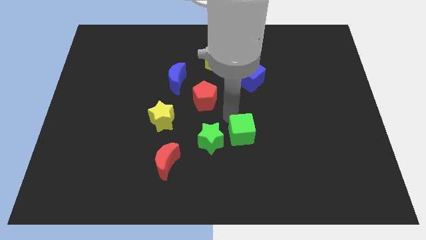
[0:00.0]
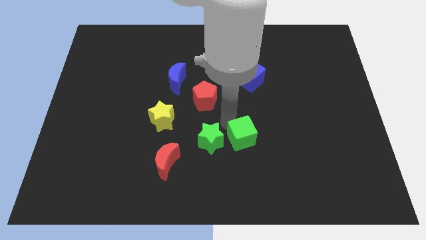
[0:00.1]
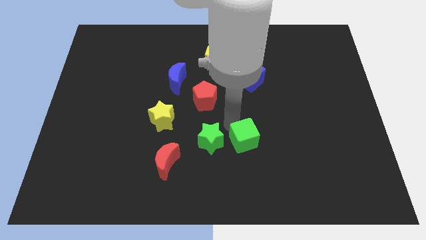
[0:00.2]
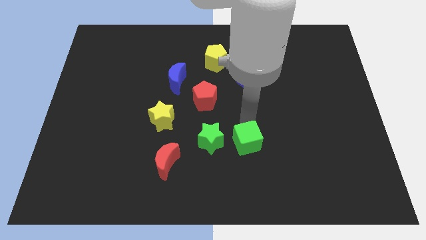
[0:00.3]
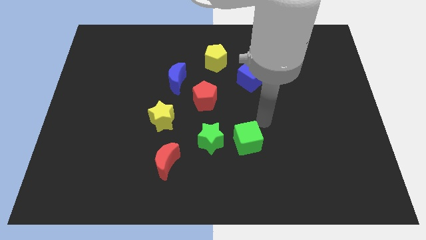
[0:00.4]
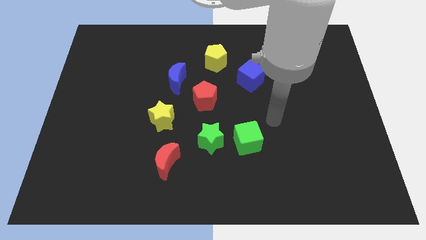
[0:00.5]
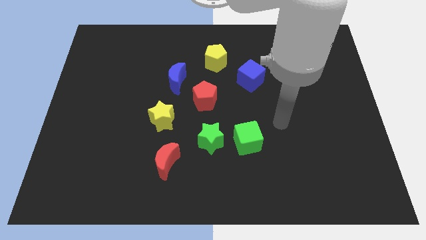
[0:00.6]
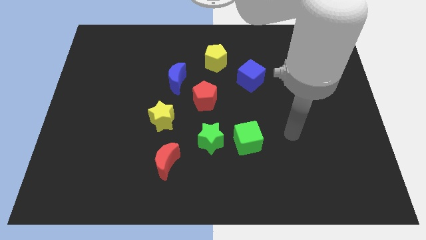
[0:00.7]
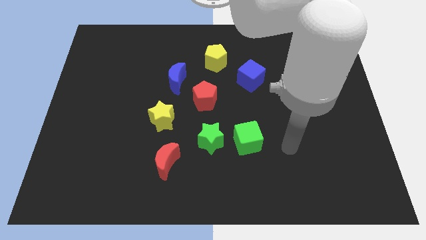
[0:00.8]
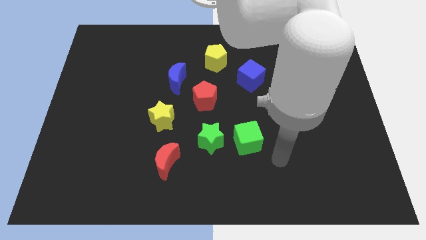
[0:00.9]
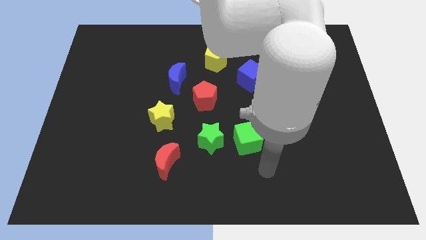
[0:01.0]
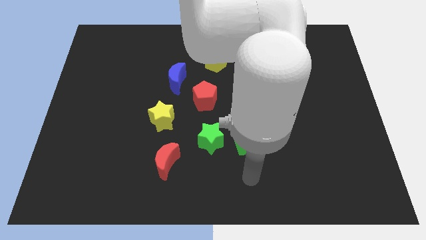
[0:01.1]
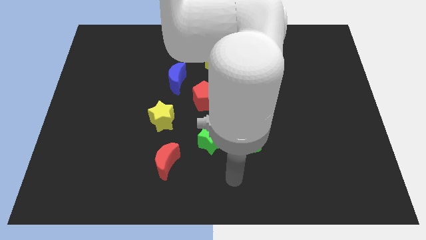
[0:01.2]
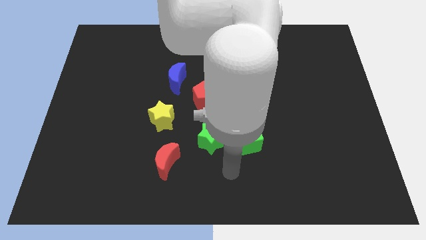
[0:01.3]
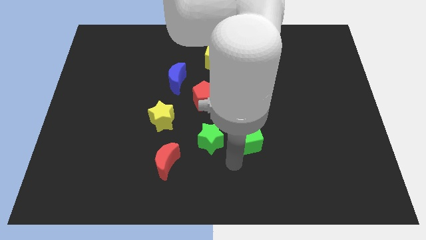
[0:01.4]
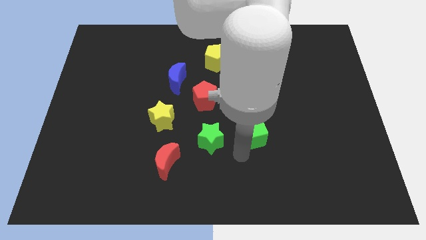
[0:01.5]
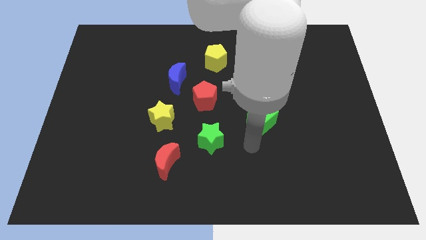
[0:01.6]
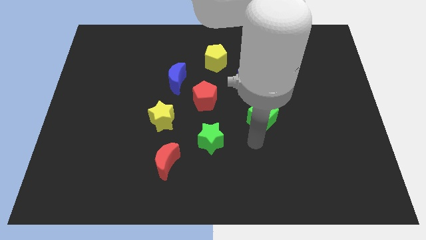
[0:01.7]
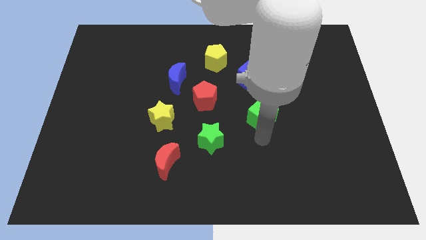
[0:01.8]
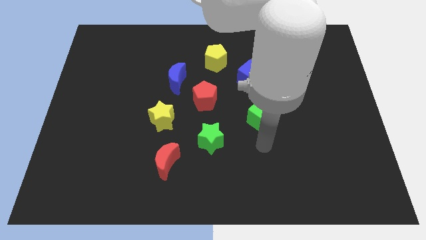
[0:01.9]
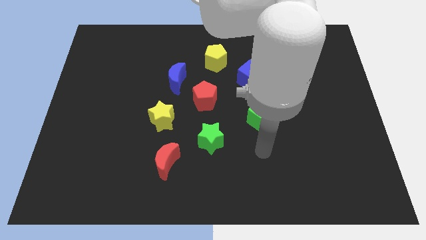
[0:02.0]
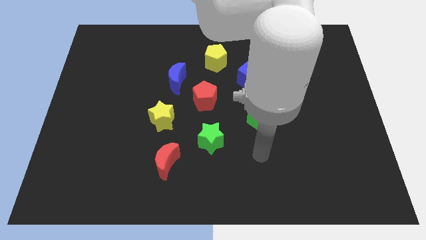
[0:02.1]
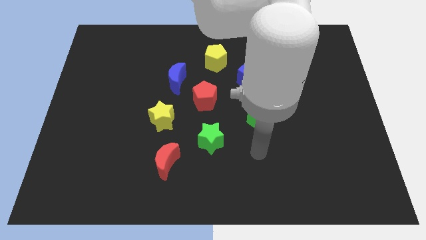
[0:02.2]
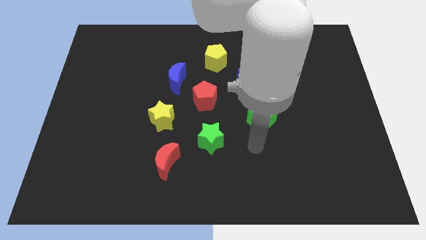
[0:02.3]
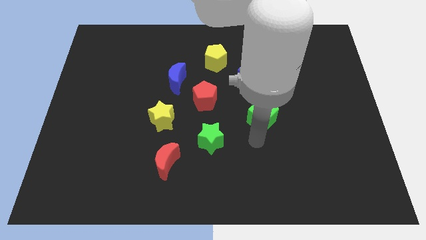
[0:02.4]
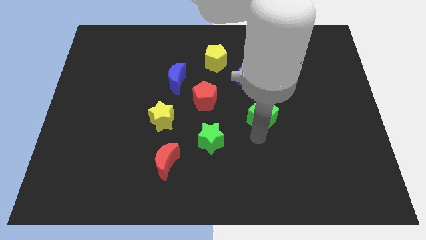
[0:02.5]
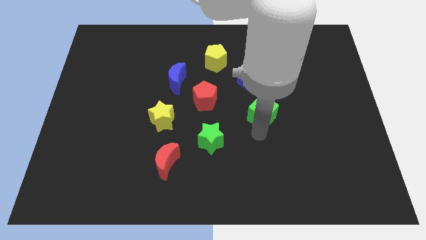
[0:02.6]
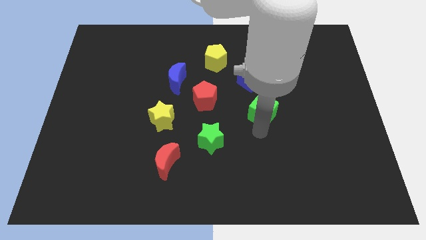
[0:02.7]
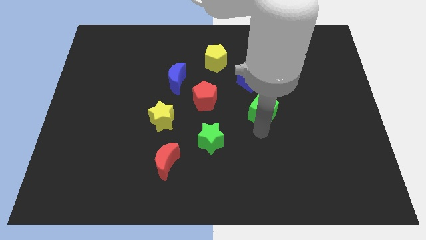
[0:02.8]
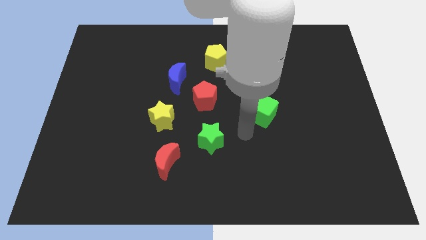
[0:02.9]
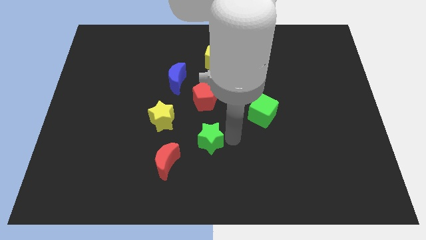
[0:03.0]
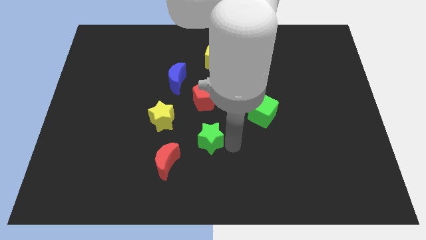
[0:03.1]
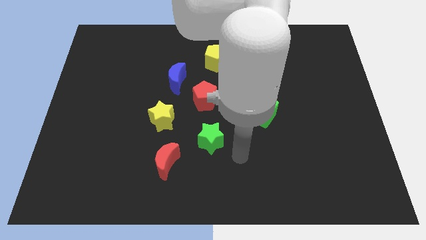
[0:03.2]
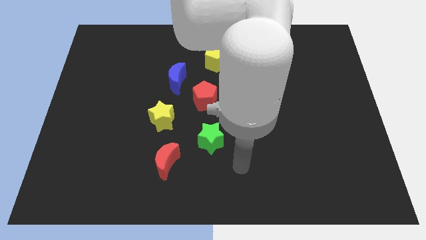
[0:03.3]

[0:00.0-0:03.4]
put the green cube diagonally top right to the green star

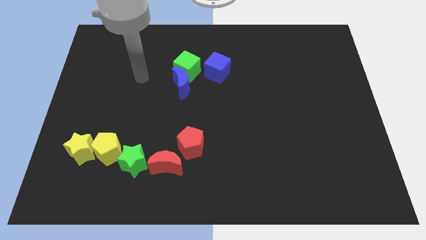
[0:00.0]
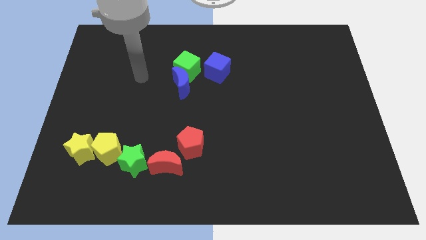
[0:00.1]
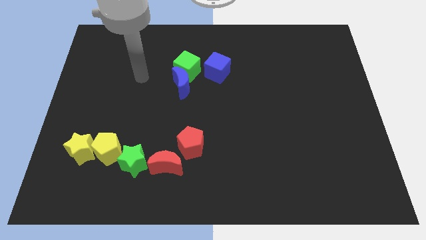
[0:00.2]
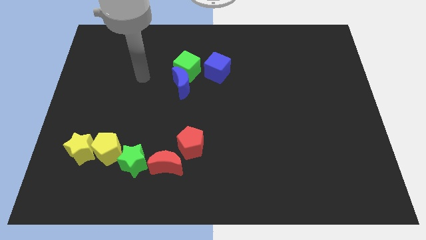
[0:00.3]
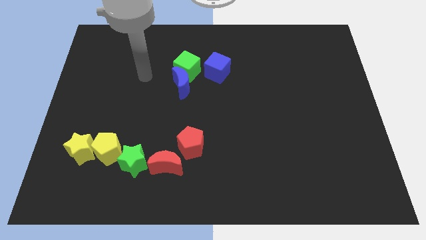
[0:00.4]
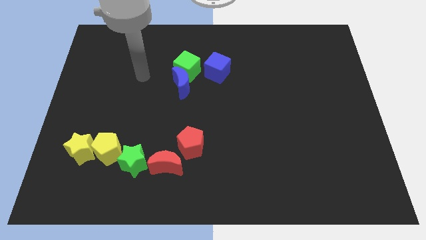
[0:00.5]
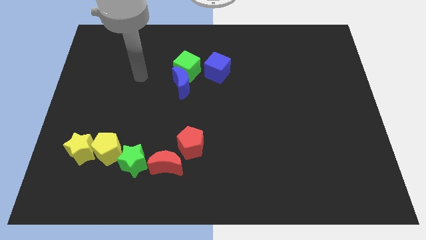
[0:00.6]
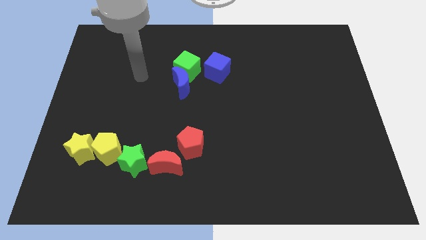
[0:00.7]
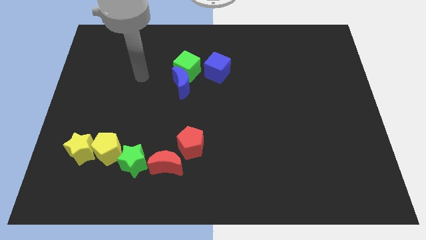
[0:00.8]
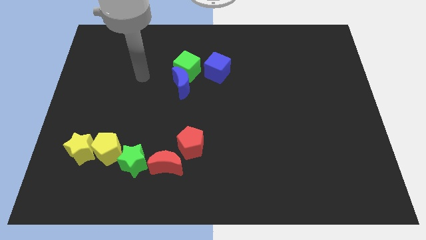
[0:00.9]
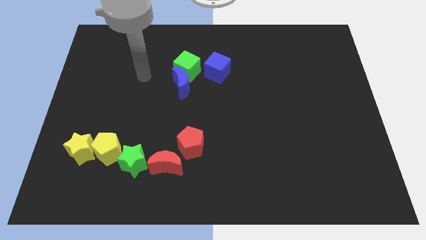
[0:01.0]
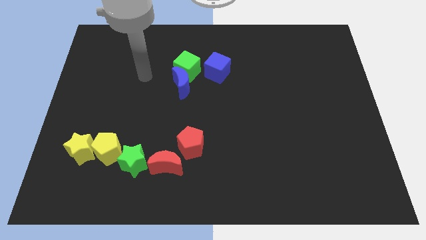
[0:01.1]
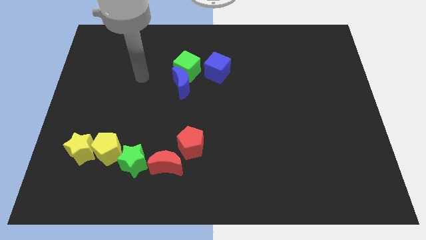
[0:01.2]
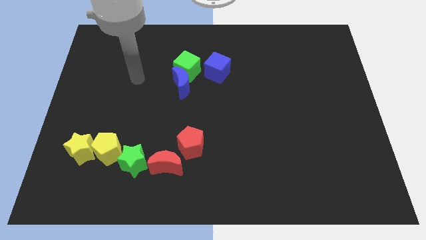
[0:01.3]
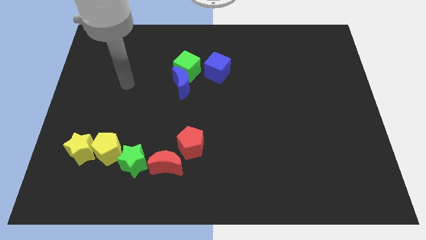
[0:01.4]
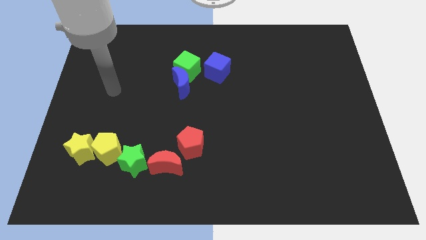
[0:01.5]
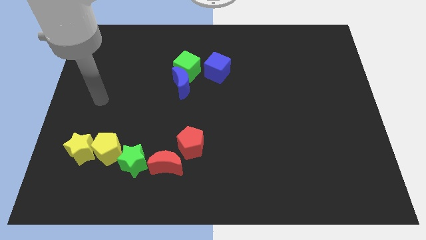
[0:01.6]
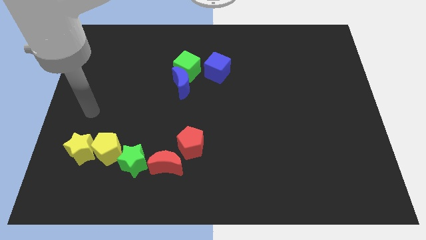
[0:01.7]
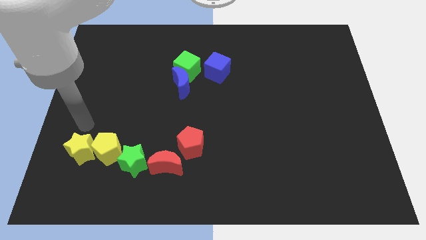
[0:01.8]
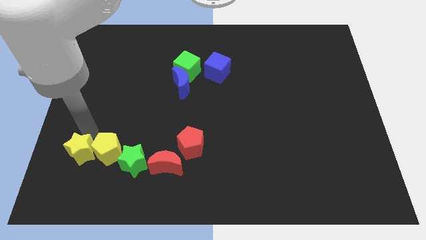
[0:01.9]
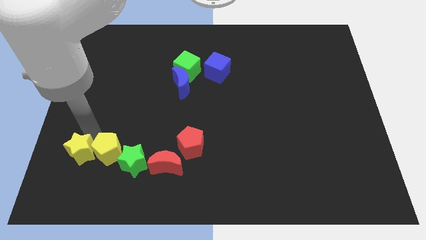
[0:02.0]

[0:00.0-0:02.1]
point the arm above the yellow star

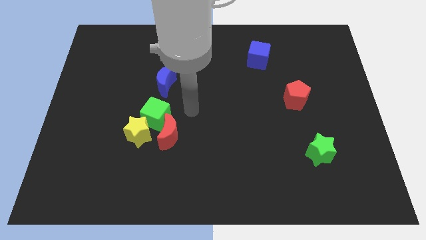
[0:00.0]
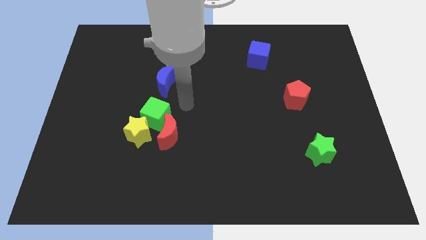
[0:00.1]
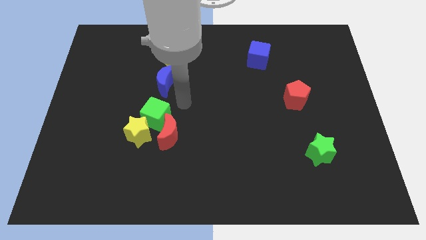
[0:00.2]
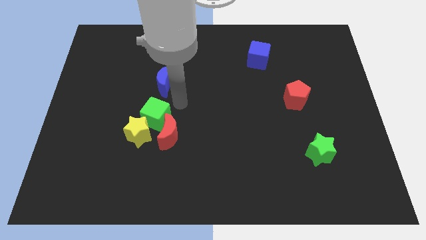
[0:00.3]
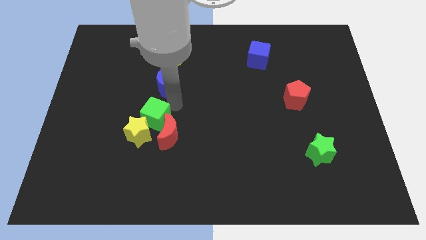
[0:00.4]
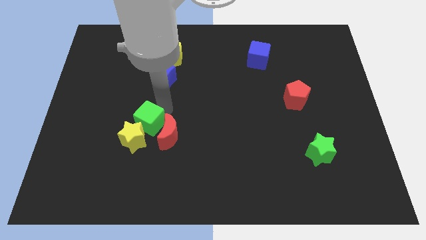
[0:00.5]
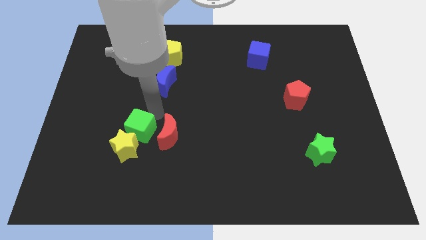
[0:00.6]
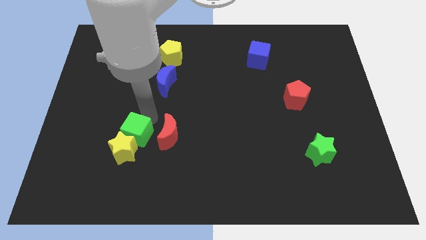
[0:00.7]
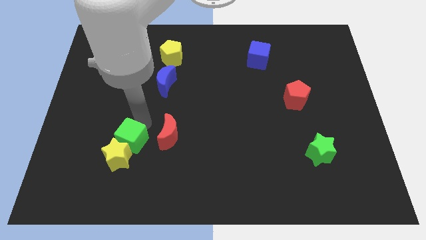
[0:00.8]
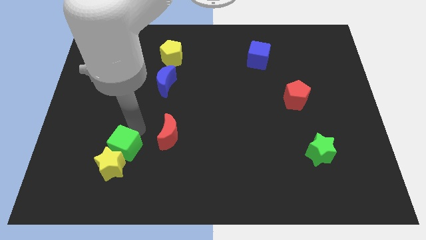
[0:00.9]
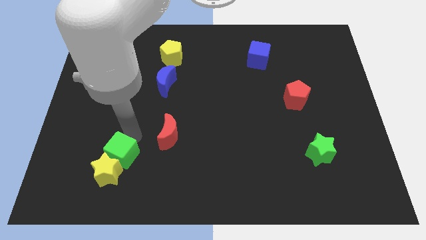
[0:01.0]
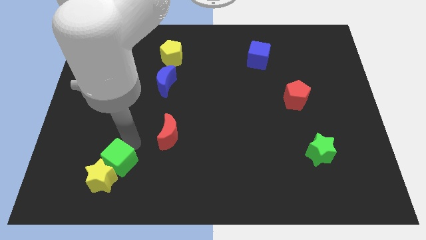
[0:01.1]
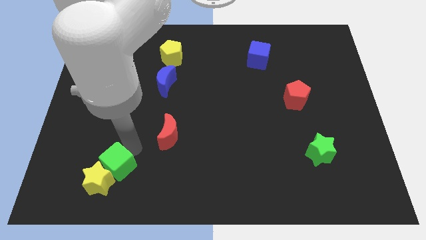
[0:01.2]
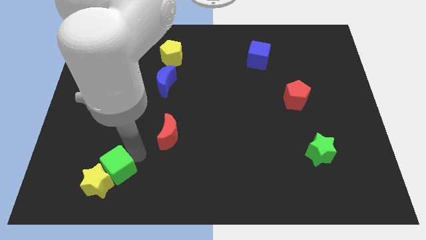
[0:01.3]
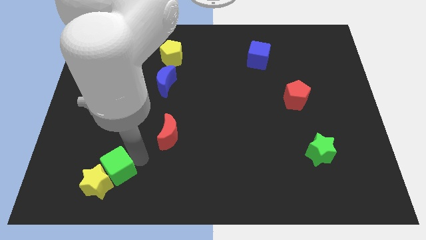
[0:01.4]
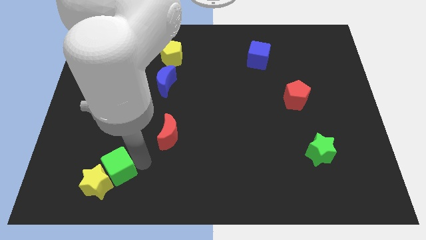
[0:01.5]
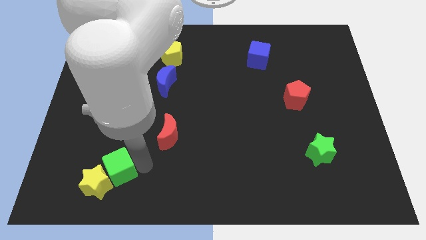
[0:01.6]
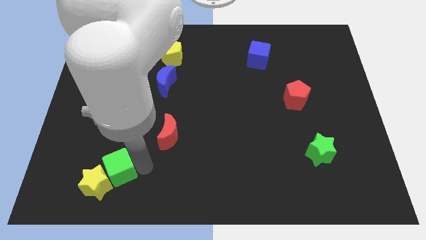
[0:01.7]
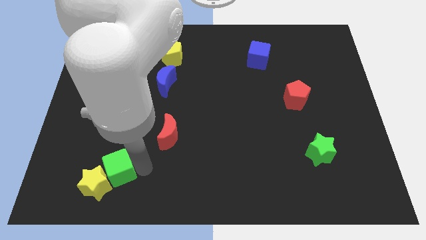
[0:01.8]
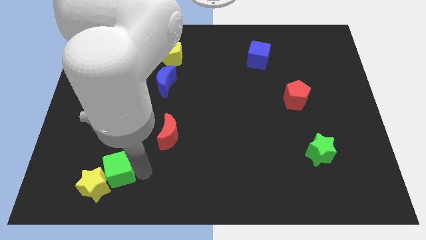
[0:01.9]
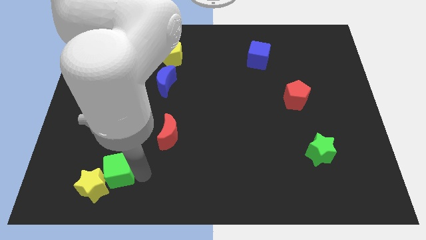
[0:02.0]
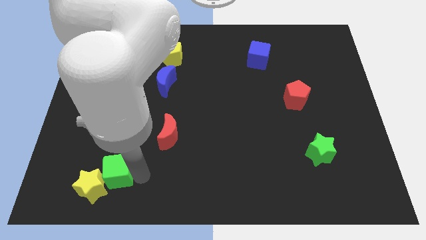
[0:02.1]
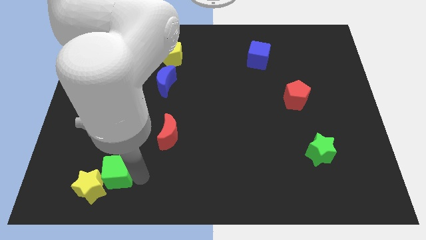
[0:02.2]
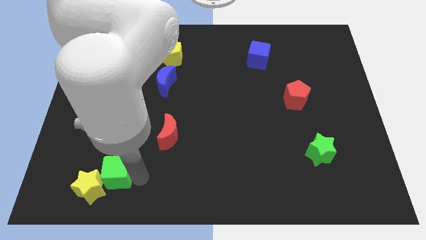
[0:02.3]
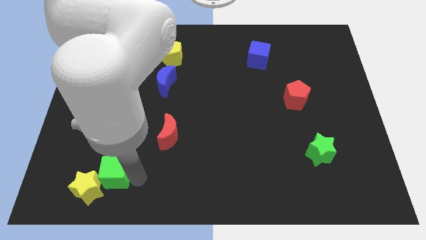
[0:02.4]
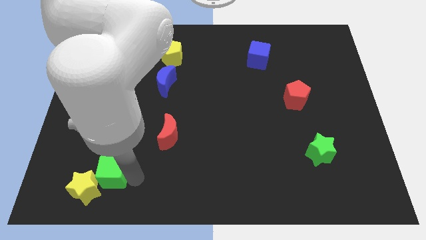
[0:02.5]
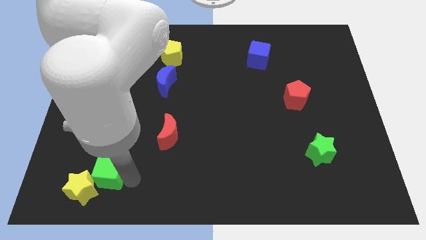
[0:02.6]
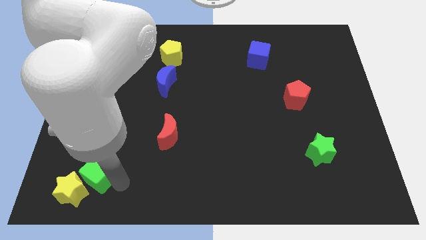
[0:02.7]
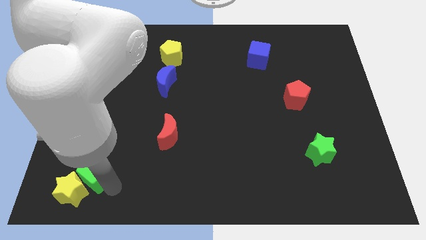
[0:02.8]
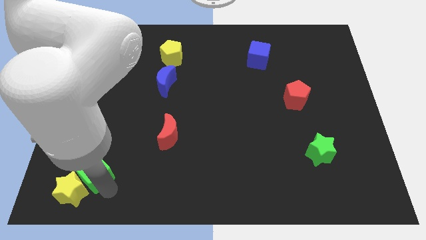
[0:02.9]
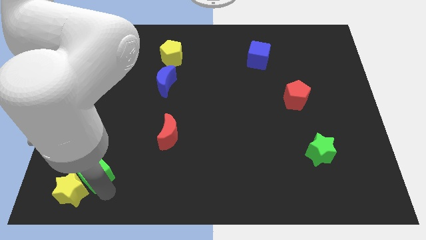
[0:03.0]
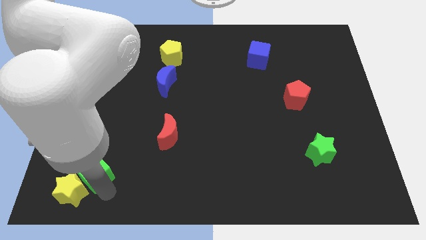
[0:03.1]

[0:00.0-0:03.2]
push the green cube and yellow star towards the bottom left corner

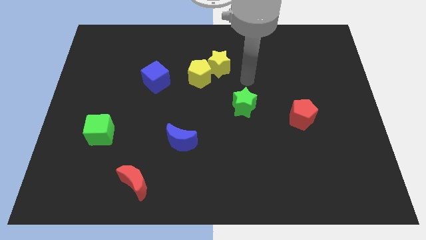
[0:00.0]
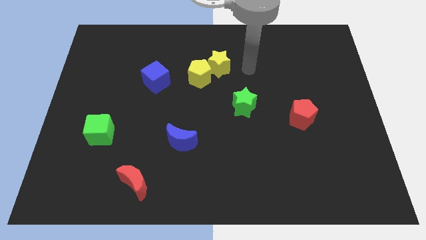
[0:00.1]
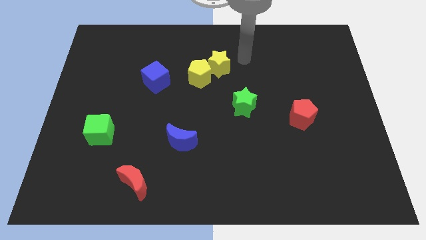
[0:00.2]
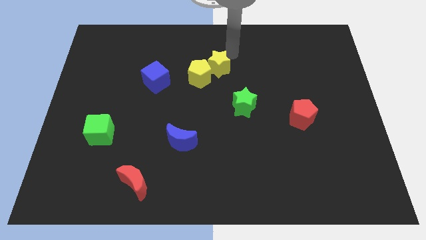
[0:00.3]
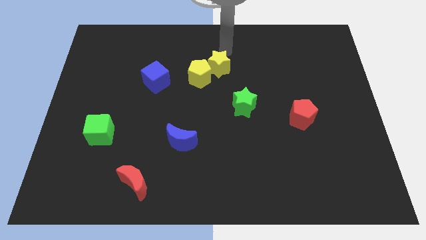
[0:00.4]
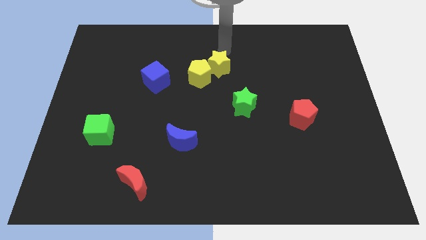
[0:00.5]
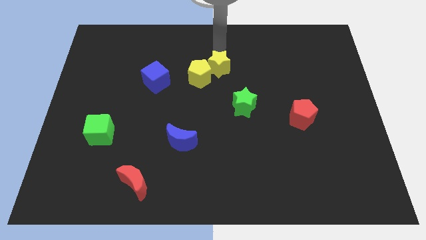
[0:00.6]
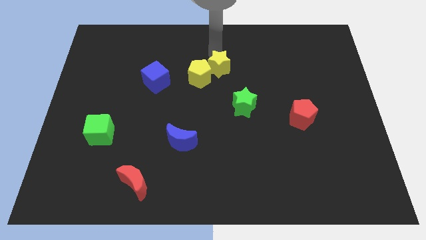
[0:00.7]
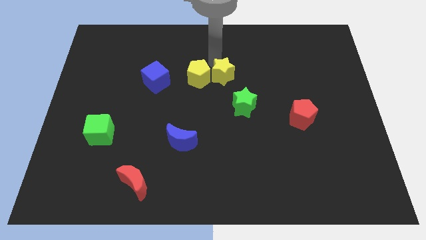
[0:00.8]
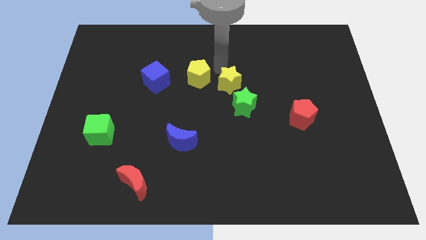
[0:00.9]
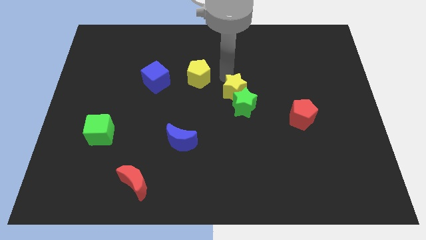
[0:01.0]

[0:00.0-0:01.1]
push the yellow star to the top of the green star
